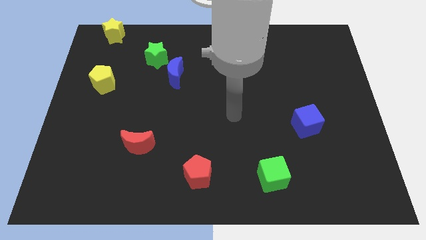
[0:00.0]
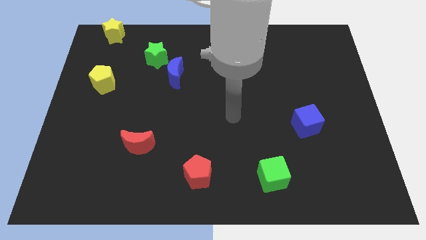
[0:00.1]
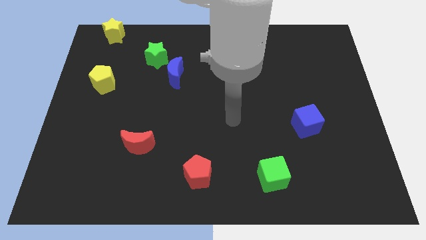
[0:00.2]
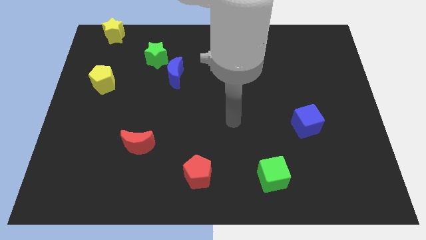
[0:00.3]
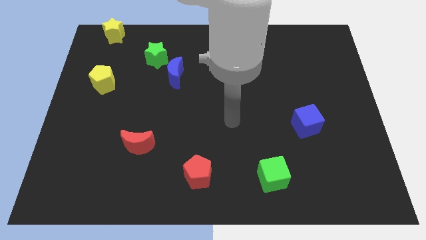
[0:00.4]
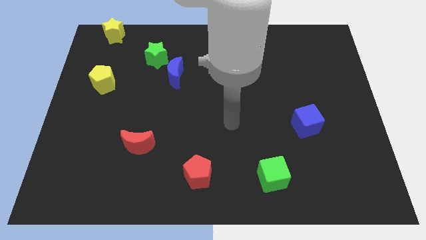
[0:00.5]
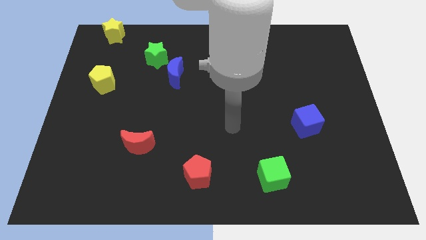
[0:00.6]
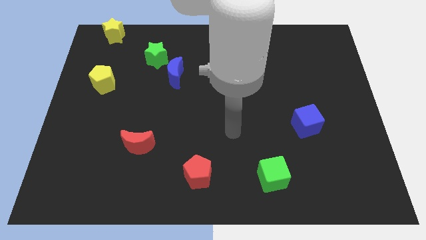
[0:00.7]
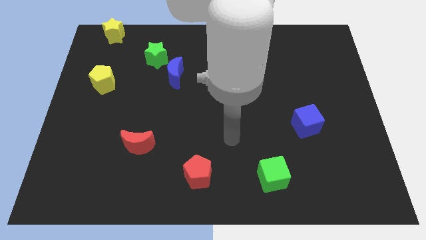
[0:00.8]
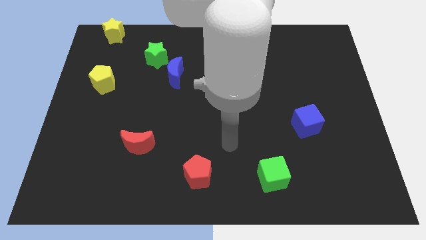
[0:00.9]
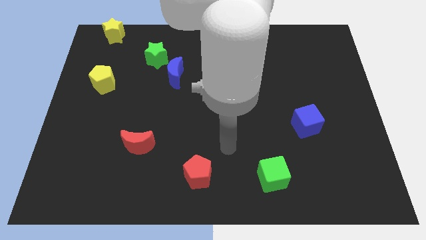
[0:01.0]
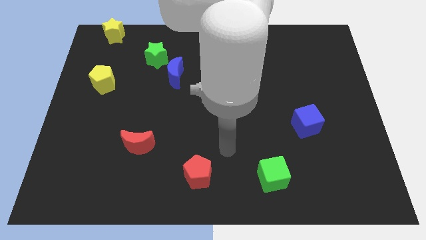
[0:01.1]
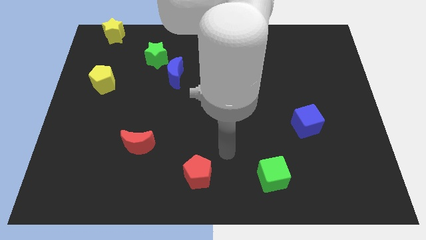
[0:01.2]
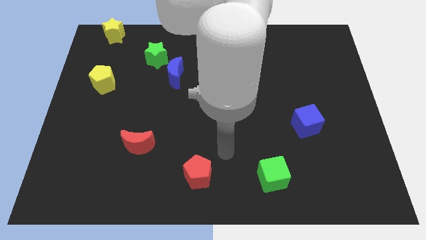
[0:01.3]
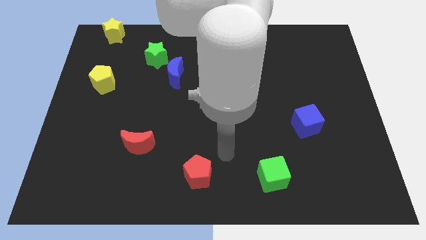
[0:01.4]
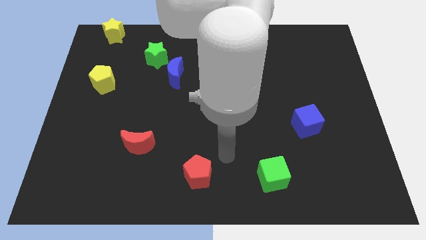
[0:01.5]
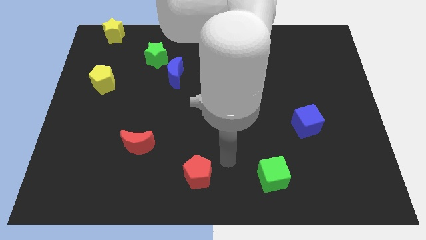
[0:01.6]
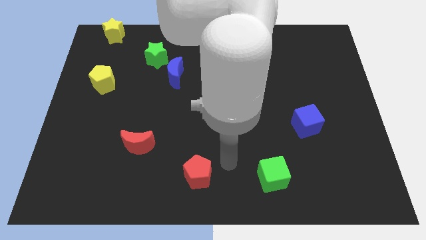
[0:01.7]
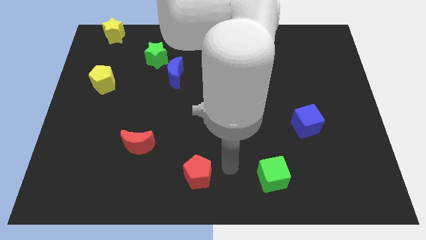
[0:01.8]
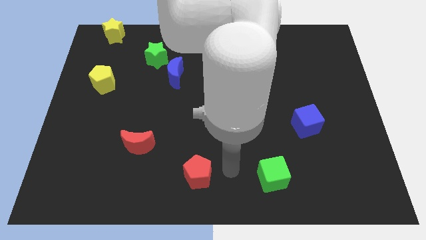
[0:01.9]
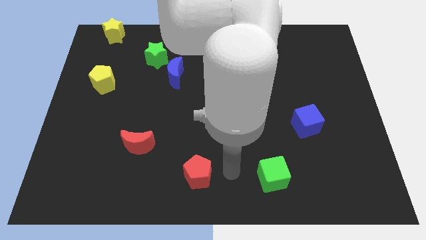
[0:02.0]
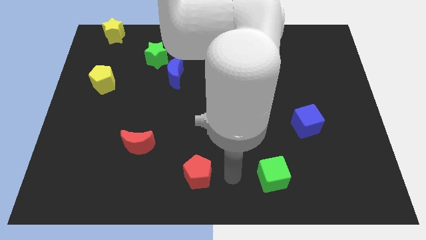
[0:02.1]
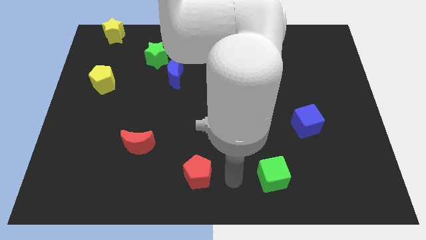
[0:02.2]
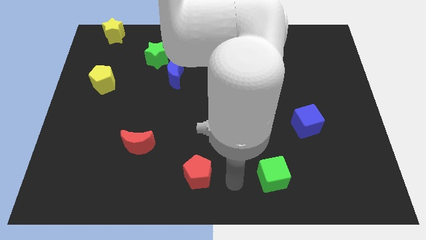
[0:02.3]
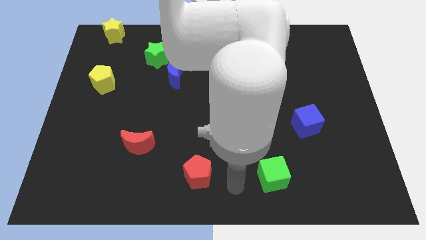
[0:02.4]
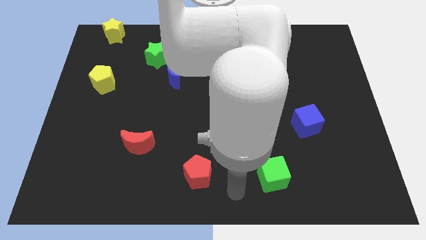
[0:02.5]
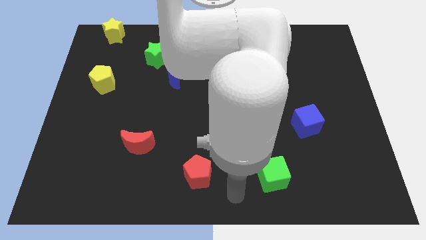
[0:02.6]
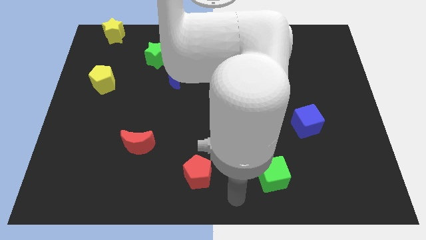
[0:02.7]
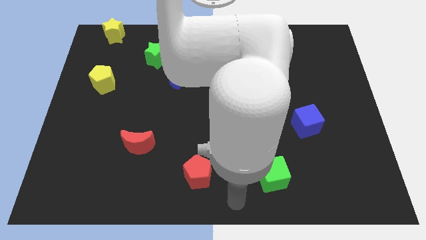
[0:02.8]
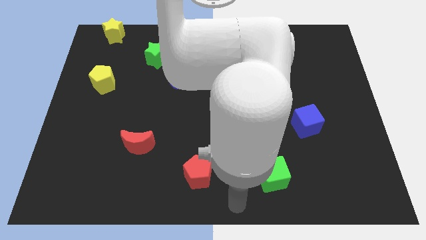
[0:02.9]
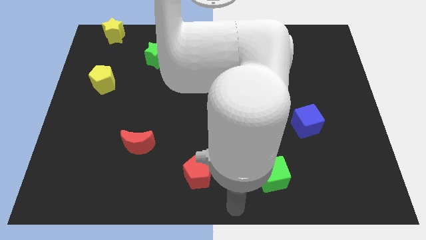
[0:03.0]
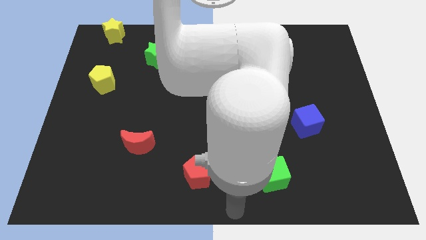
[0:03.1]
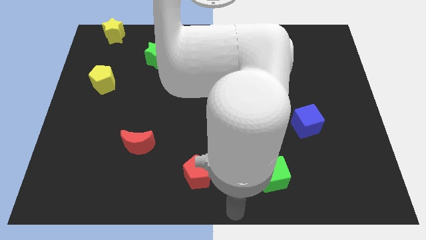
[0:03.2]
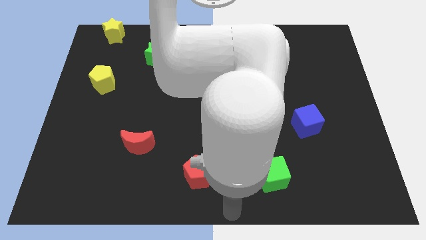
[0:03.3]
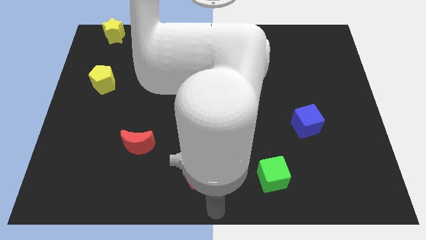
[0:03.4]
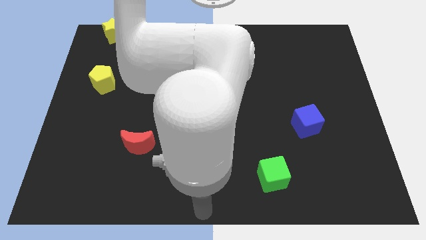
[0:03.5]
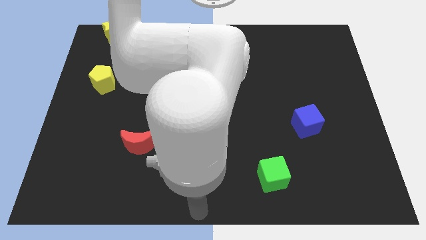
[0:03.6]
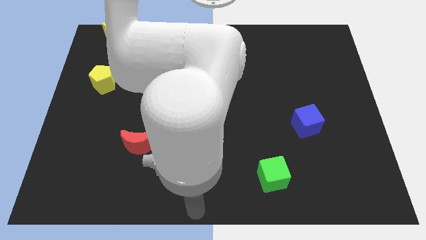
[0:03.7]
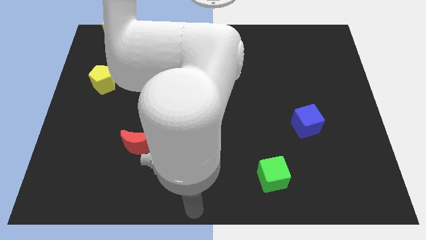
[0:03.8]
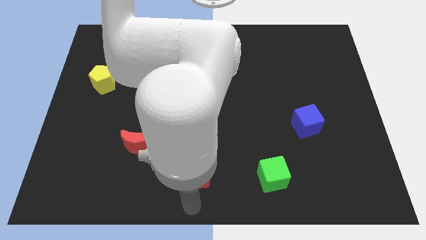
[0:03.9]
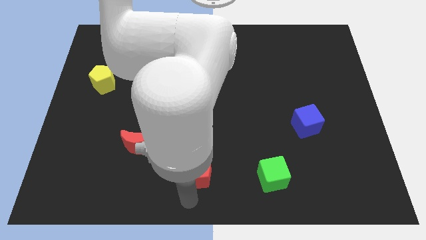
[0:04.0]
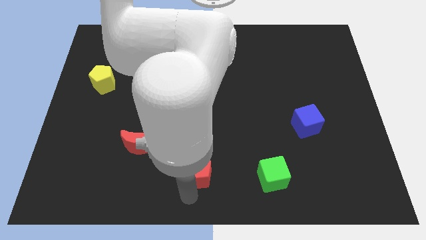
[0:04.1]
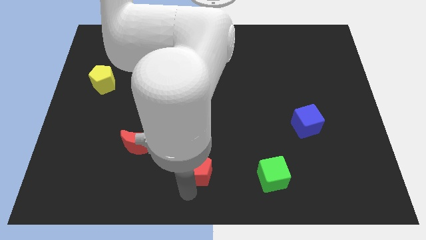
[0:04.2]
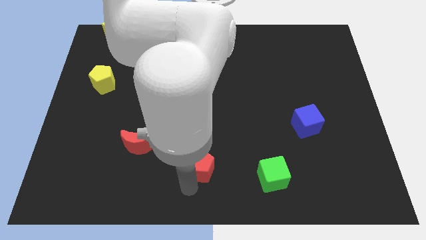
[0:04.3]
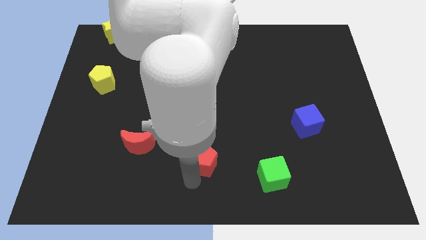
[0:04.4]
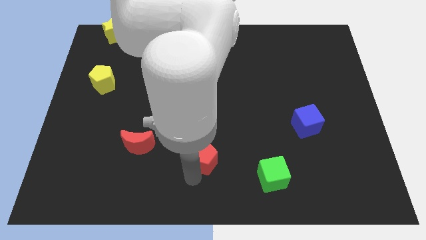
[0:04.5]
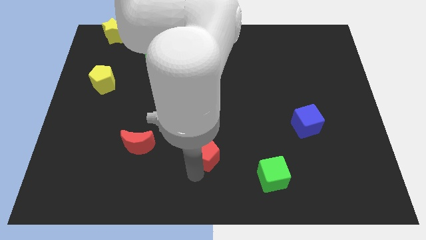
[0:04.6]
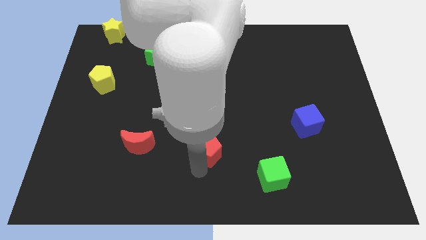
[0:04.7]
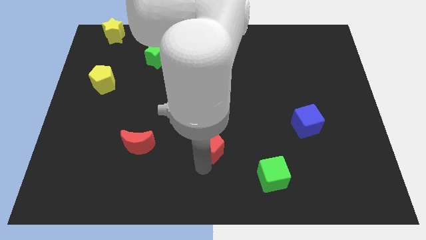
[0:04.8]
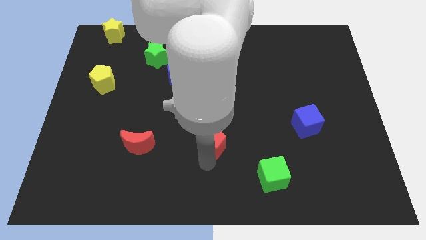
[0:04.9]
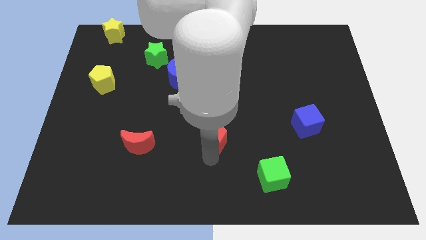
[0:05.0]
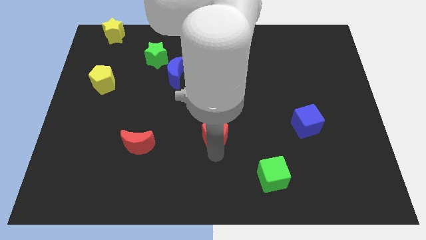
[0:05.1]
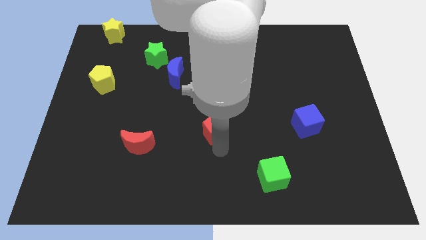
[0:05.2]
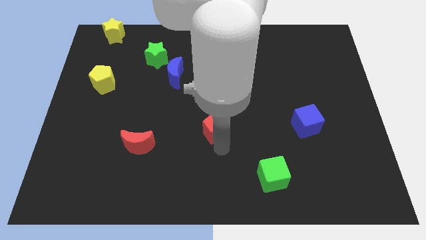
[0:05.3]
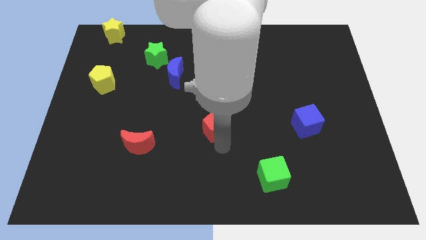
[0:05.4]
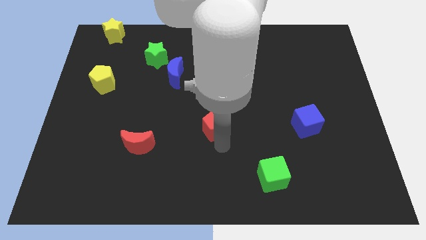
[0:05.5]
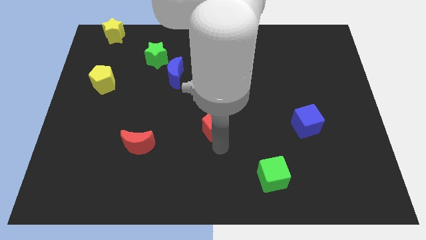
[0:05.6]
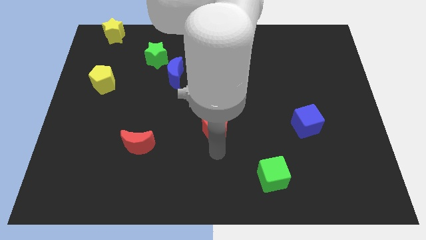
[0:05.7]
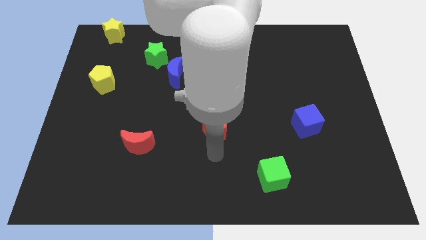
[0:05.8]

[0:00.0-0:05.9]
push the red pentagon towards the center of the board

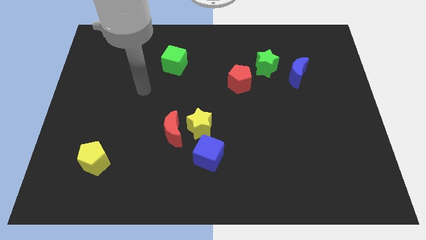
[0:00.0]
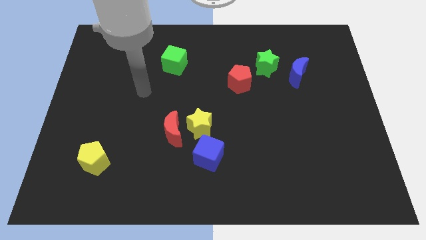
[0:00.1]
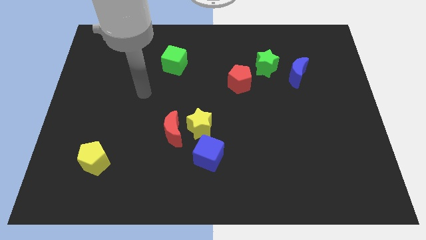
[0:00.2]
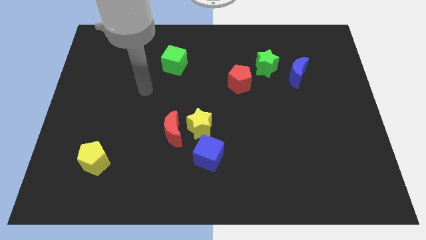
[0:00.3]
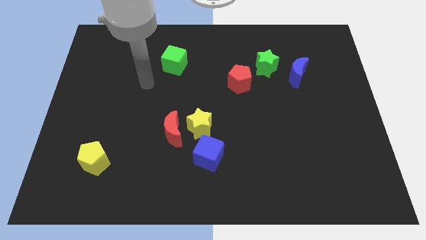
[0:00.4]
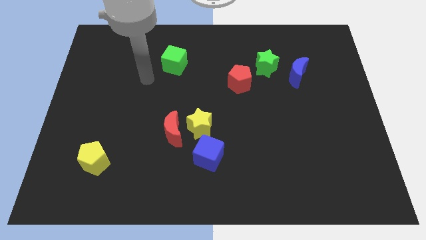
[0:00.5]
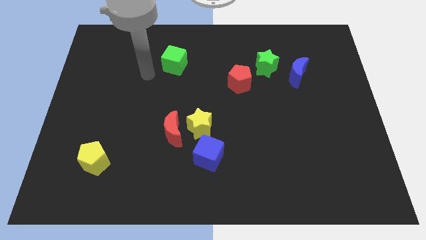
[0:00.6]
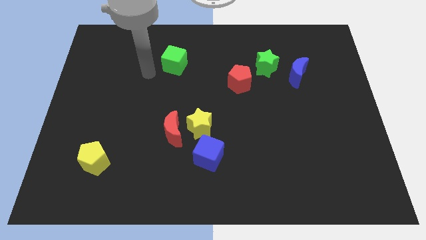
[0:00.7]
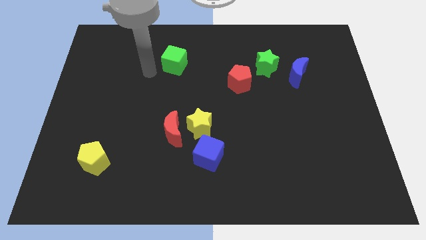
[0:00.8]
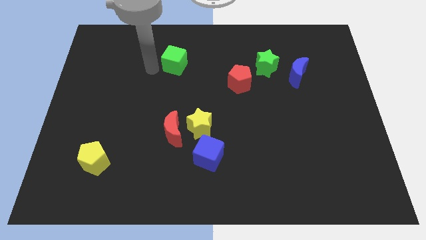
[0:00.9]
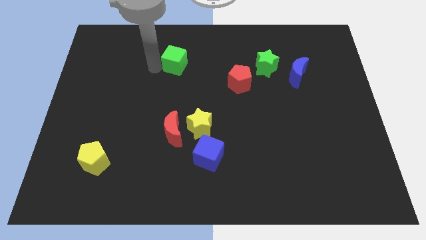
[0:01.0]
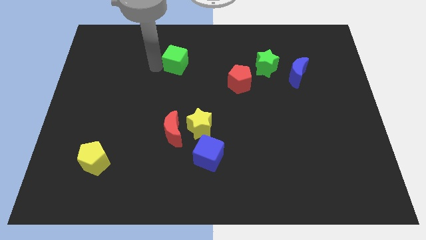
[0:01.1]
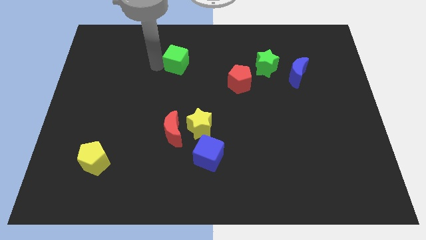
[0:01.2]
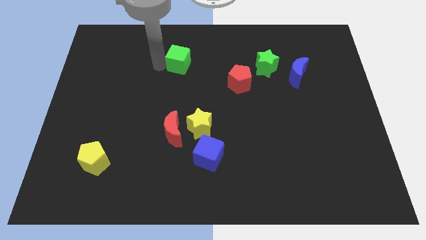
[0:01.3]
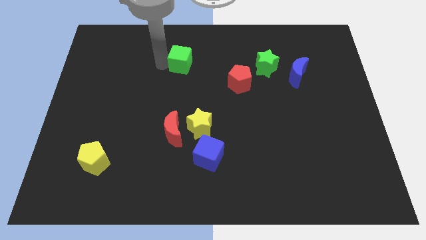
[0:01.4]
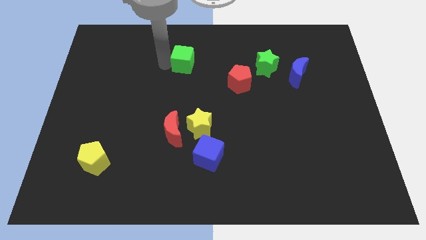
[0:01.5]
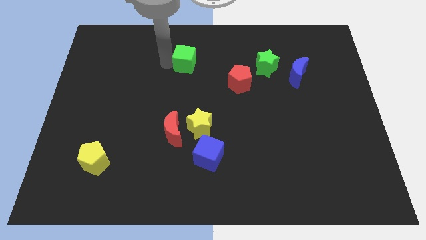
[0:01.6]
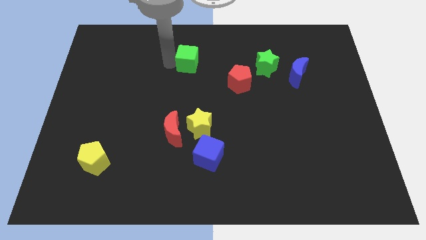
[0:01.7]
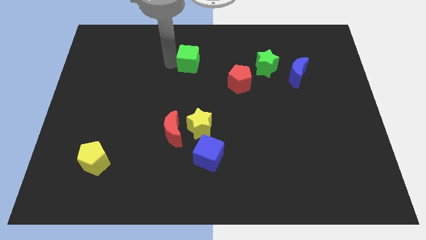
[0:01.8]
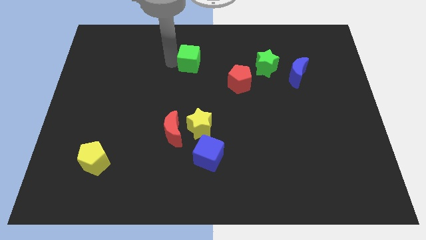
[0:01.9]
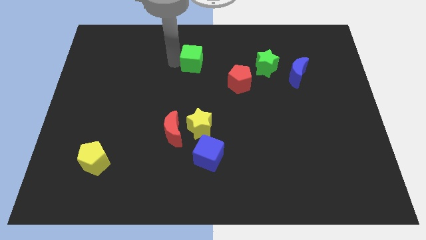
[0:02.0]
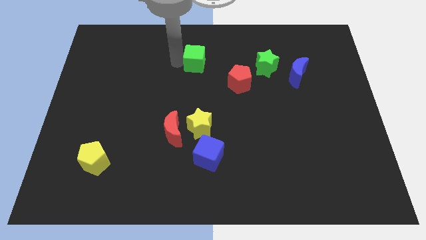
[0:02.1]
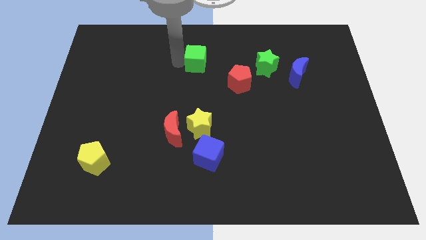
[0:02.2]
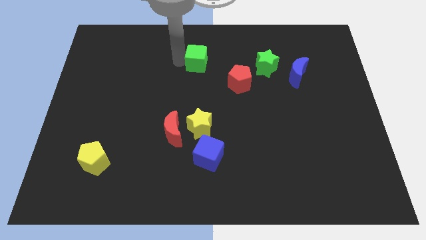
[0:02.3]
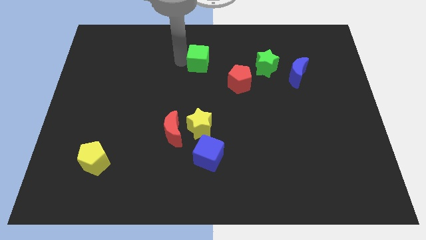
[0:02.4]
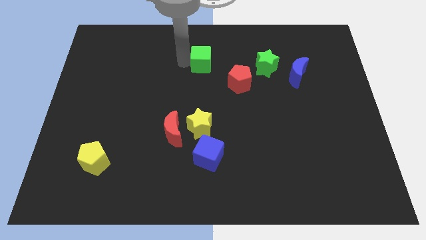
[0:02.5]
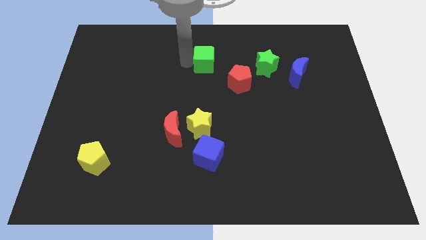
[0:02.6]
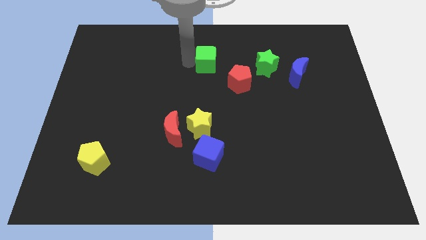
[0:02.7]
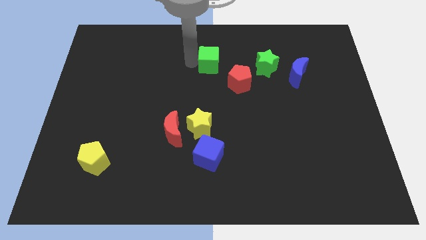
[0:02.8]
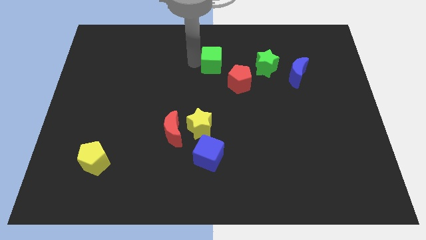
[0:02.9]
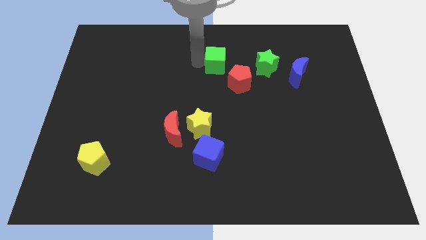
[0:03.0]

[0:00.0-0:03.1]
move the green cube close to the red pentagon
